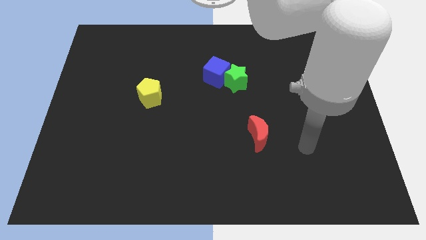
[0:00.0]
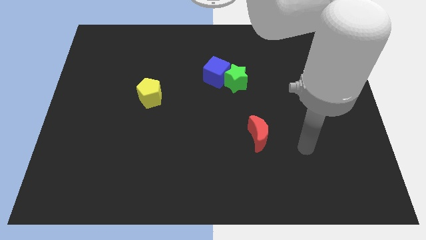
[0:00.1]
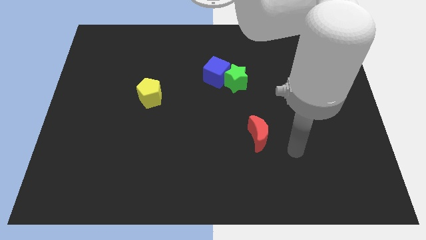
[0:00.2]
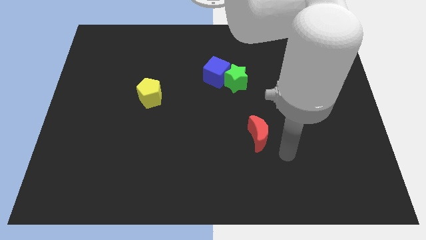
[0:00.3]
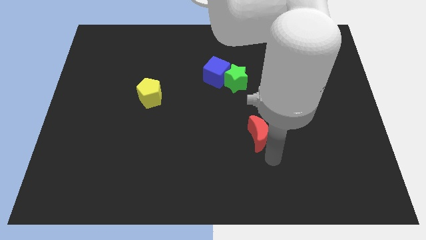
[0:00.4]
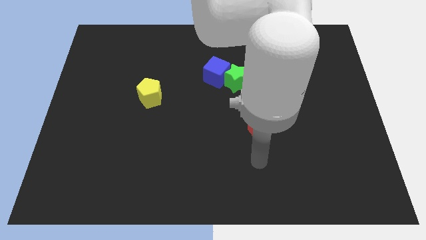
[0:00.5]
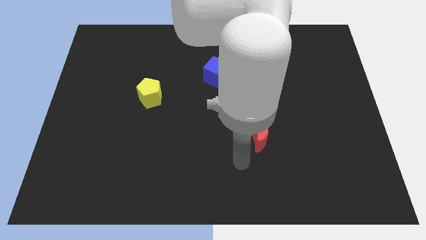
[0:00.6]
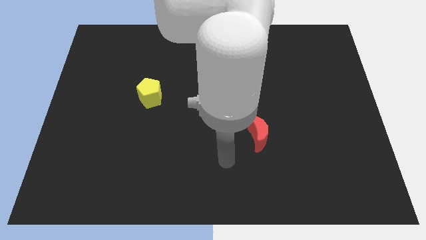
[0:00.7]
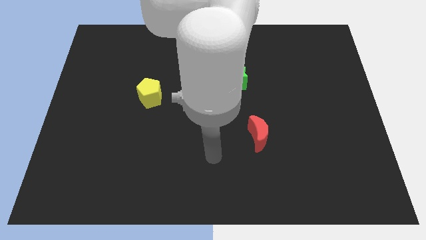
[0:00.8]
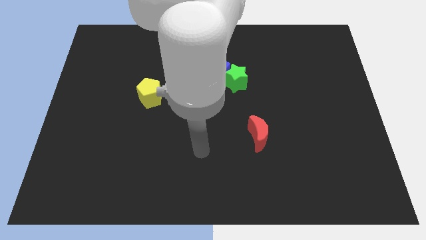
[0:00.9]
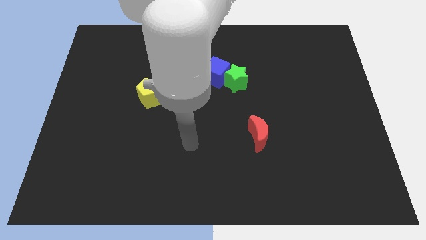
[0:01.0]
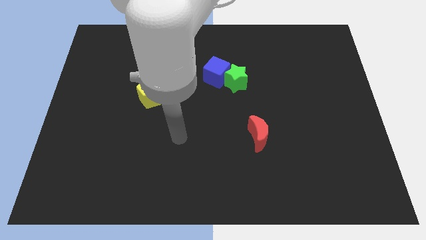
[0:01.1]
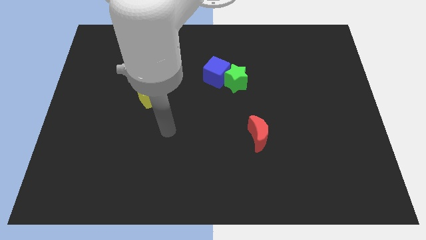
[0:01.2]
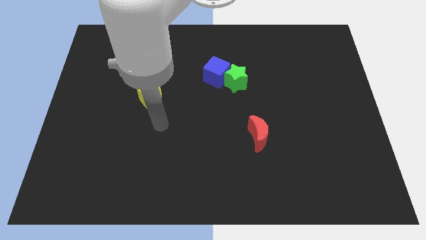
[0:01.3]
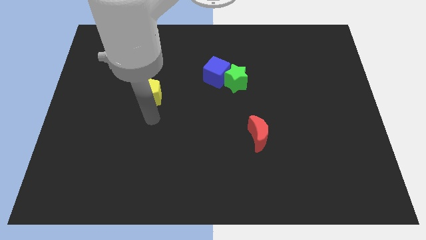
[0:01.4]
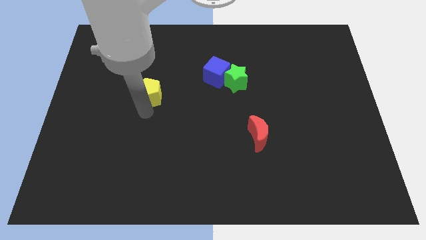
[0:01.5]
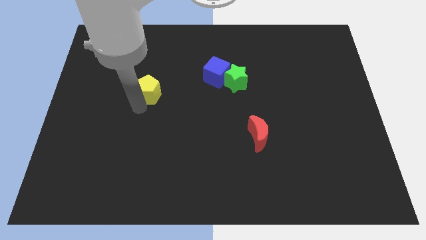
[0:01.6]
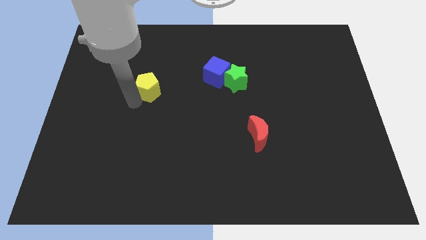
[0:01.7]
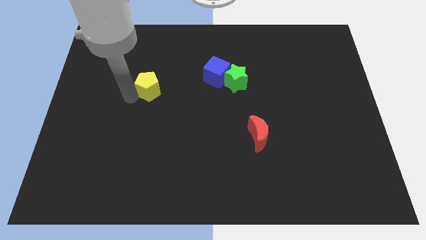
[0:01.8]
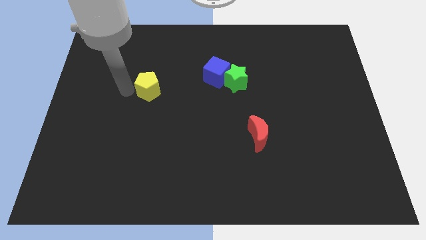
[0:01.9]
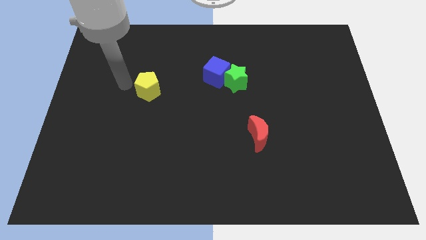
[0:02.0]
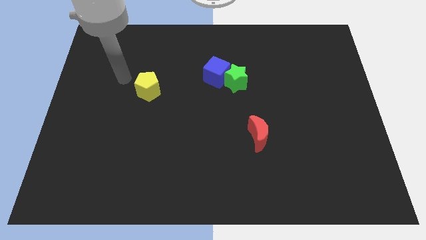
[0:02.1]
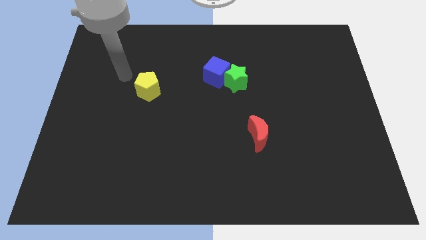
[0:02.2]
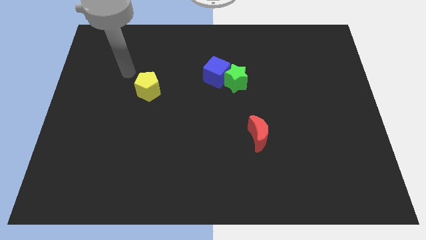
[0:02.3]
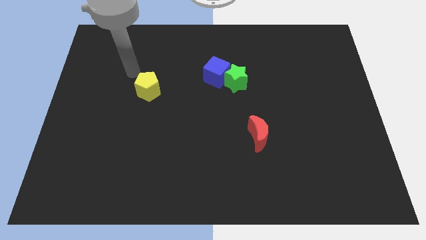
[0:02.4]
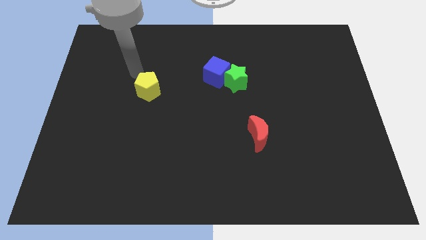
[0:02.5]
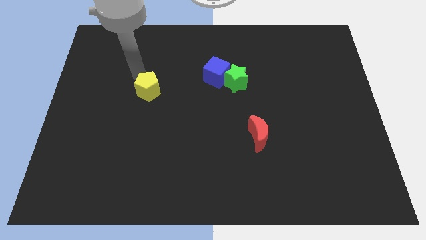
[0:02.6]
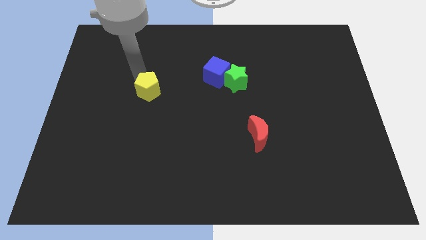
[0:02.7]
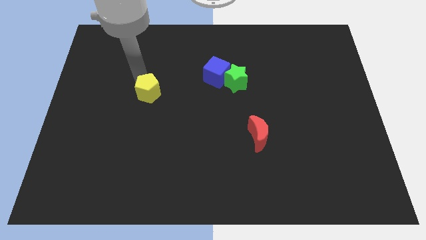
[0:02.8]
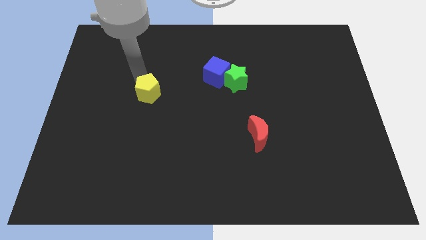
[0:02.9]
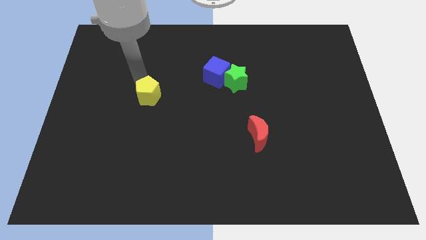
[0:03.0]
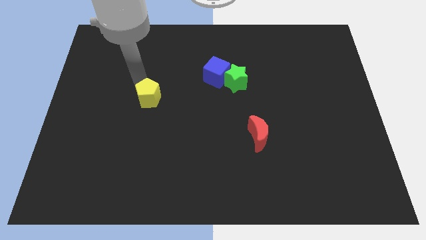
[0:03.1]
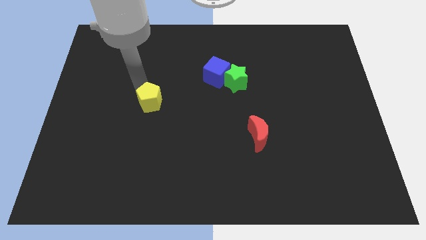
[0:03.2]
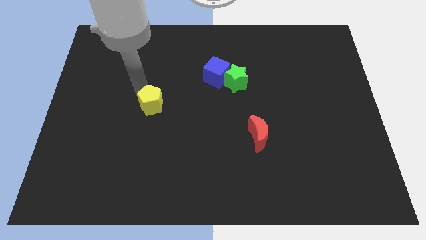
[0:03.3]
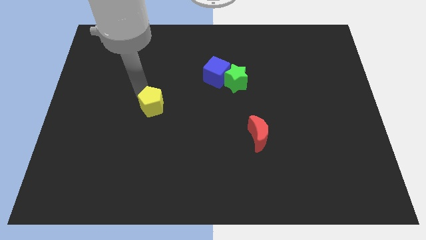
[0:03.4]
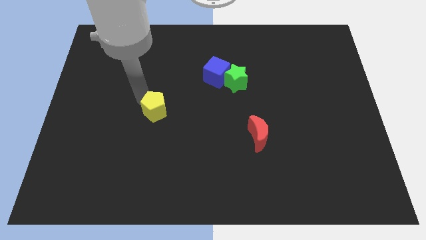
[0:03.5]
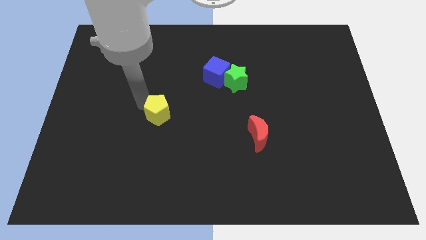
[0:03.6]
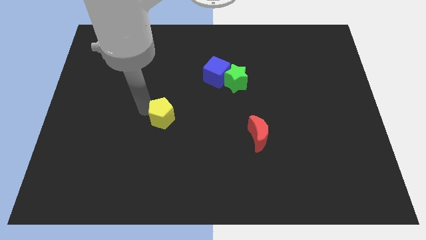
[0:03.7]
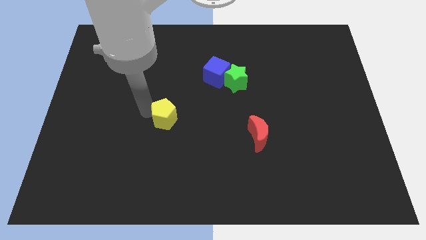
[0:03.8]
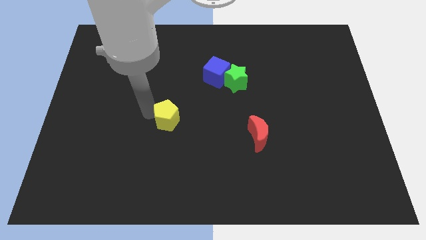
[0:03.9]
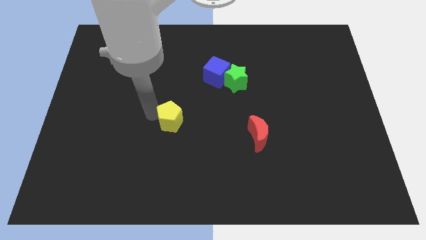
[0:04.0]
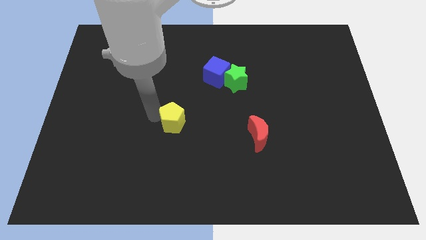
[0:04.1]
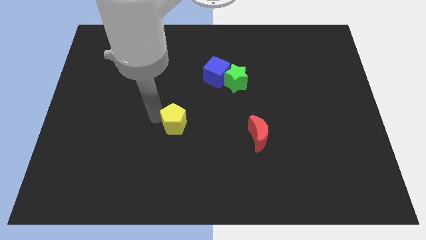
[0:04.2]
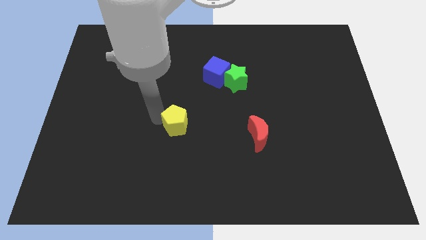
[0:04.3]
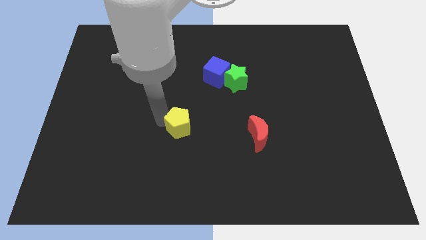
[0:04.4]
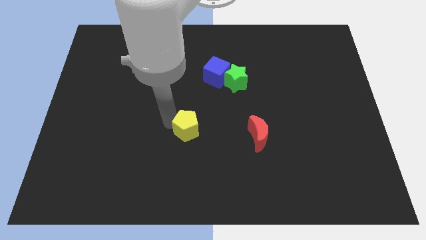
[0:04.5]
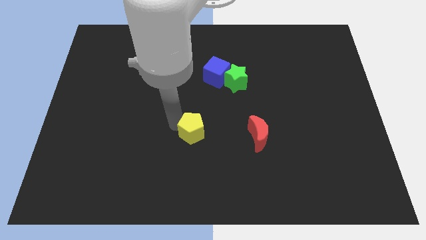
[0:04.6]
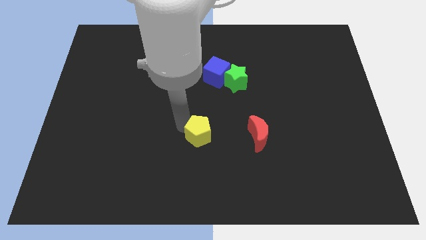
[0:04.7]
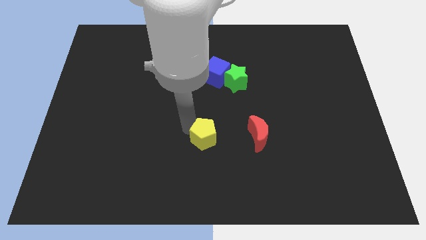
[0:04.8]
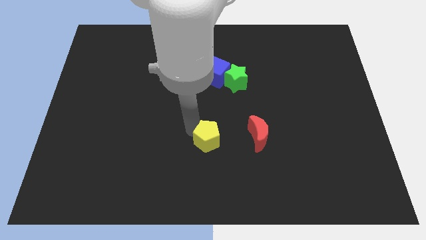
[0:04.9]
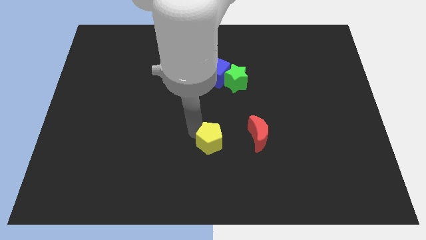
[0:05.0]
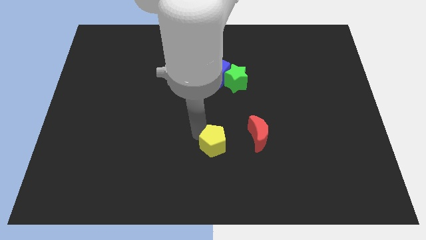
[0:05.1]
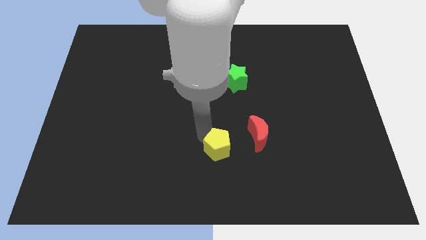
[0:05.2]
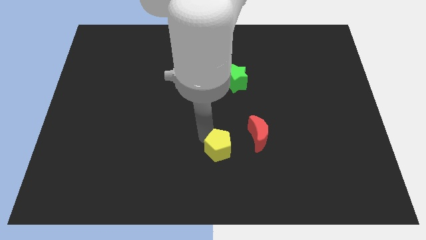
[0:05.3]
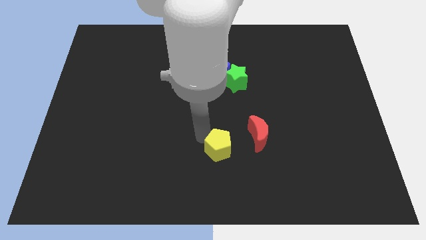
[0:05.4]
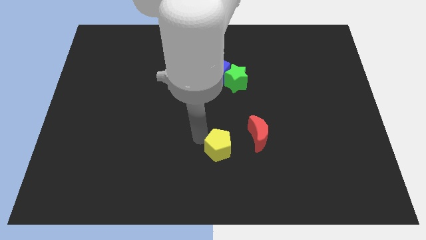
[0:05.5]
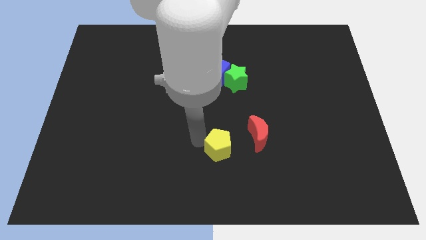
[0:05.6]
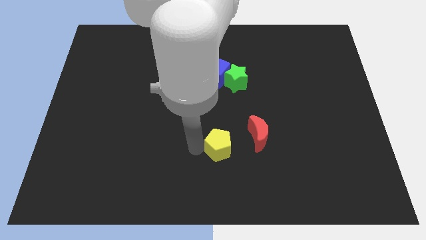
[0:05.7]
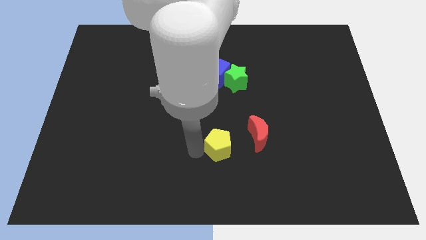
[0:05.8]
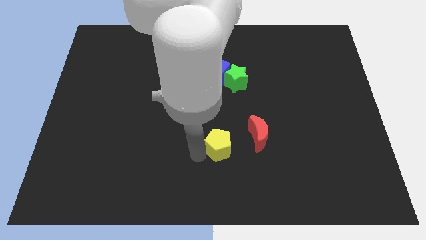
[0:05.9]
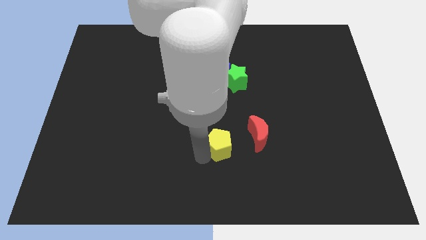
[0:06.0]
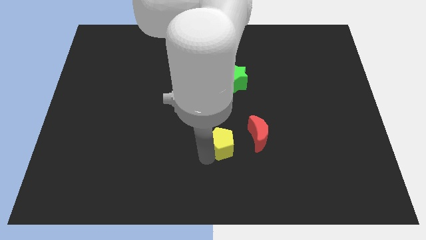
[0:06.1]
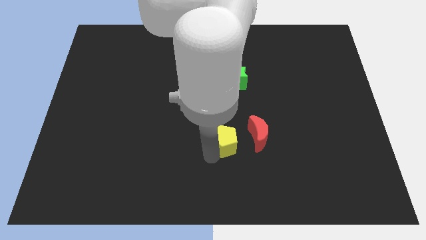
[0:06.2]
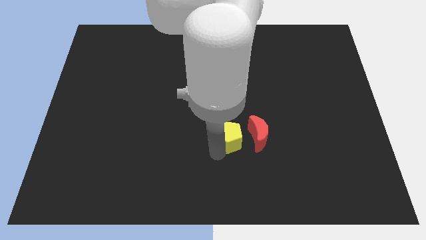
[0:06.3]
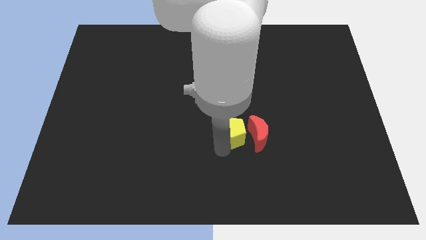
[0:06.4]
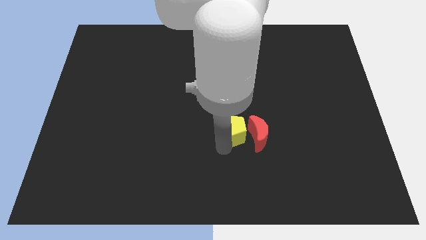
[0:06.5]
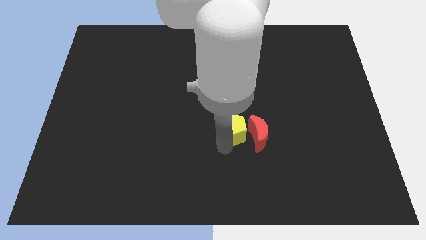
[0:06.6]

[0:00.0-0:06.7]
push the yellow pentagon towards the red block

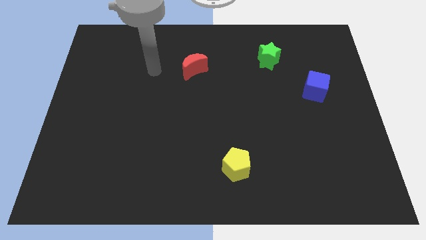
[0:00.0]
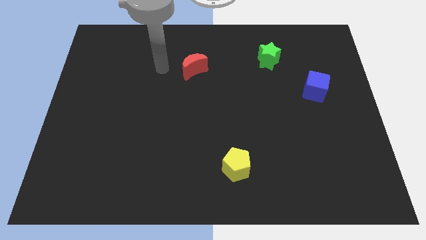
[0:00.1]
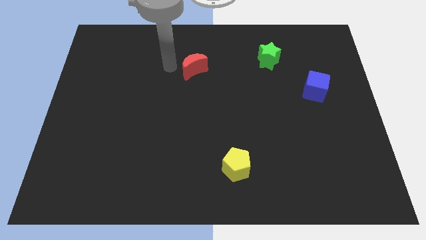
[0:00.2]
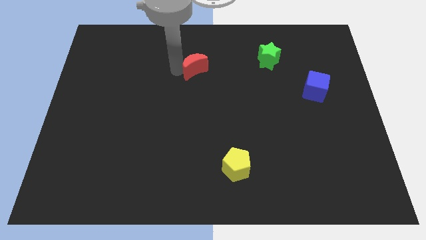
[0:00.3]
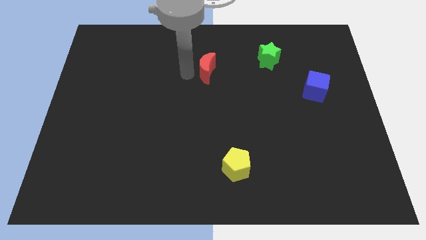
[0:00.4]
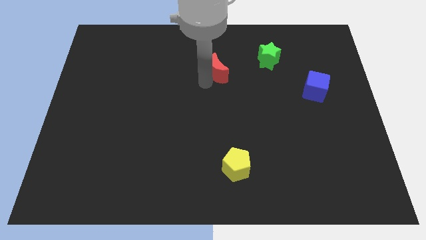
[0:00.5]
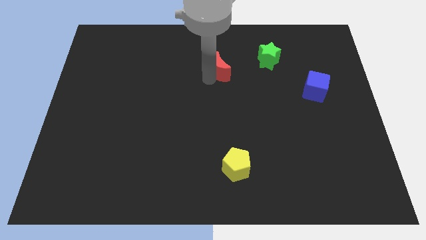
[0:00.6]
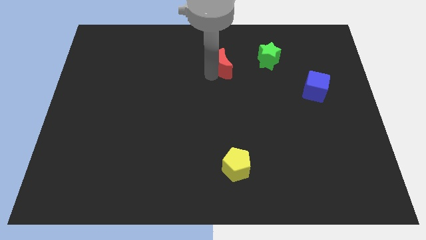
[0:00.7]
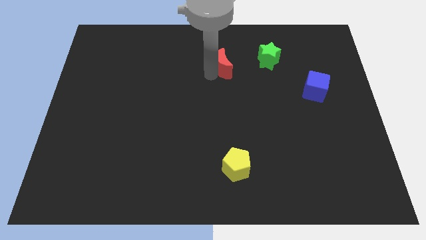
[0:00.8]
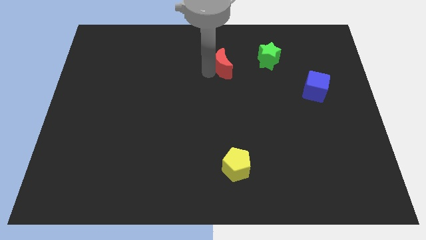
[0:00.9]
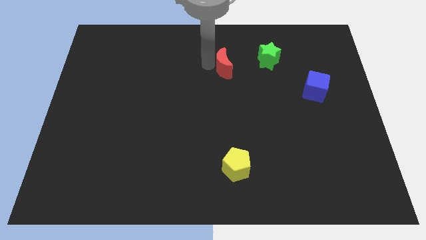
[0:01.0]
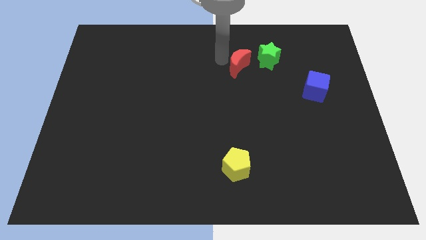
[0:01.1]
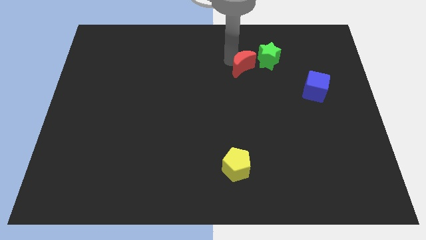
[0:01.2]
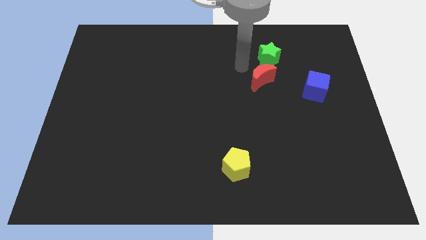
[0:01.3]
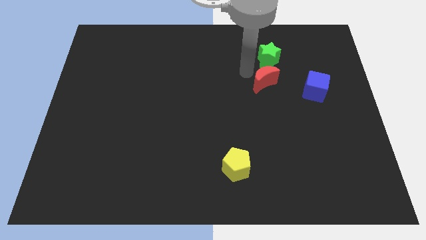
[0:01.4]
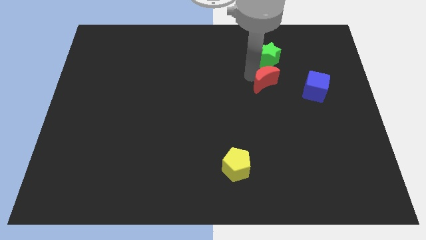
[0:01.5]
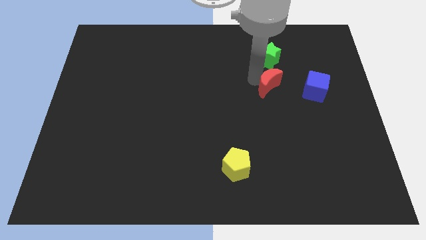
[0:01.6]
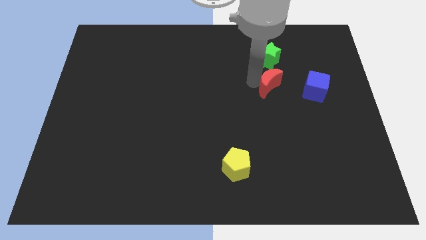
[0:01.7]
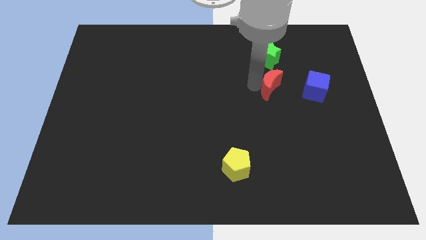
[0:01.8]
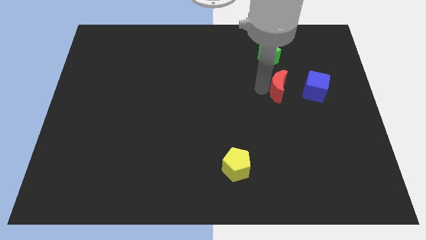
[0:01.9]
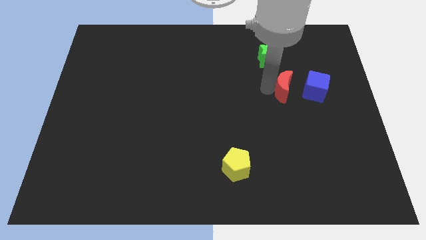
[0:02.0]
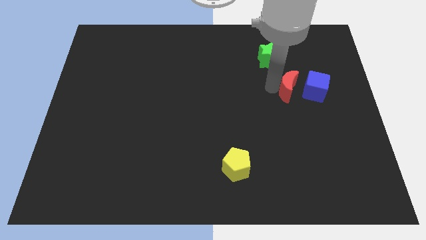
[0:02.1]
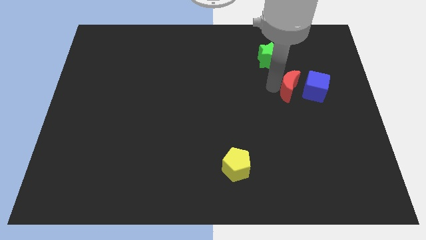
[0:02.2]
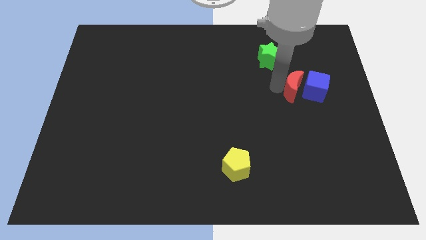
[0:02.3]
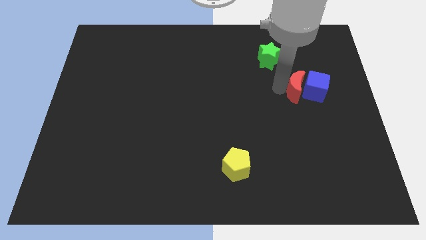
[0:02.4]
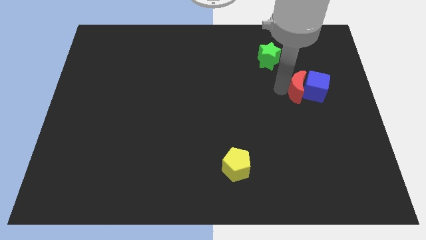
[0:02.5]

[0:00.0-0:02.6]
put the red moon close to the cube
